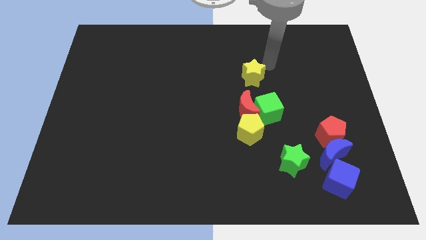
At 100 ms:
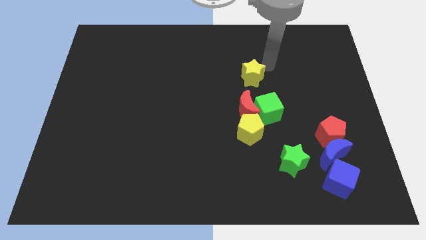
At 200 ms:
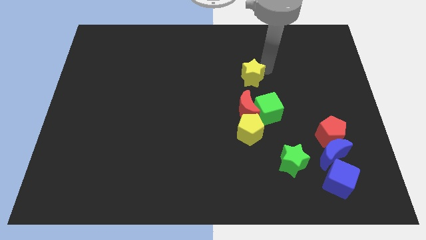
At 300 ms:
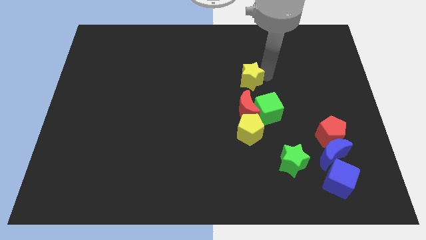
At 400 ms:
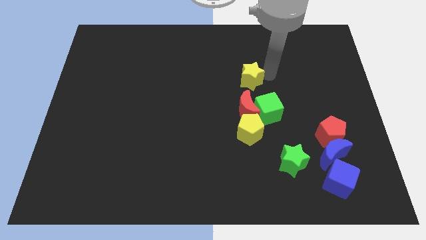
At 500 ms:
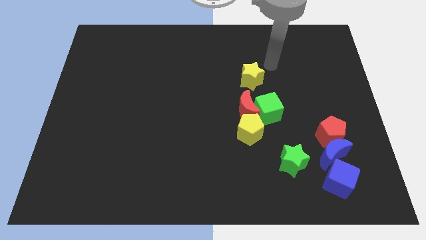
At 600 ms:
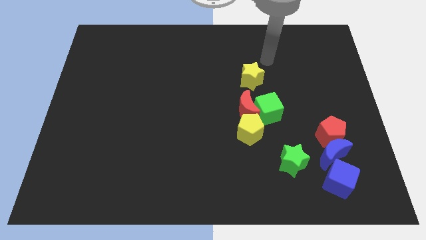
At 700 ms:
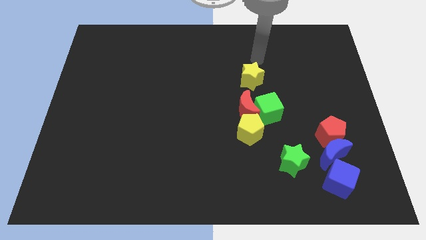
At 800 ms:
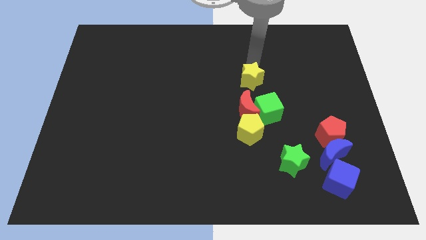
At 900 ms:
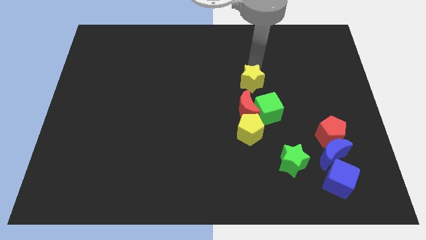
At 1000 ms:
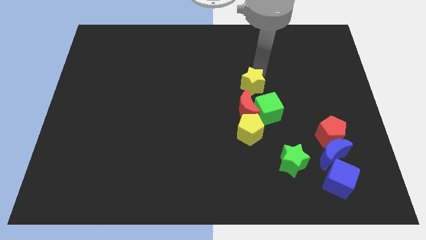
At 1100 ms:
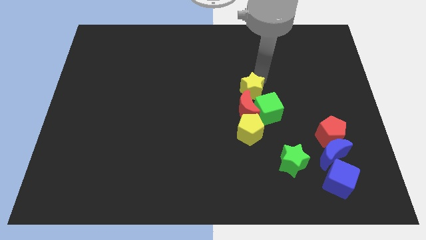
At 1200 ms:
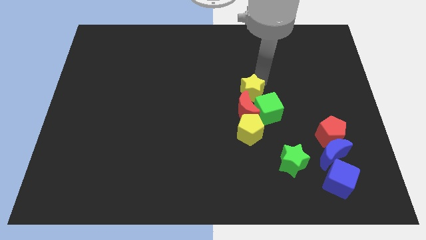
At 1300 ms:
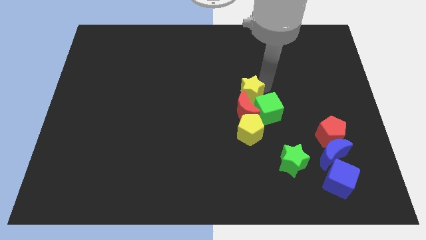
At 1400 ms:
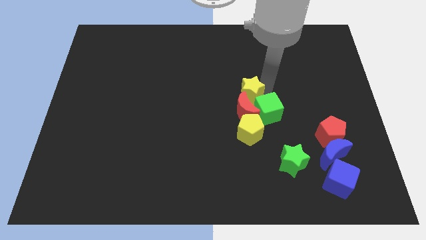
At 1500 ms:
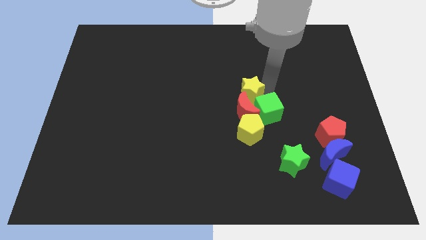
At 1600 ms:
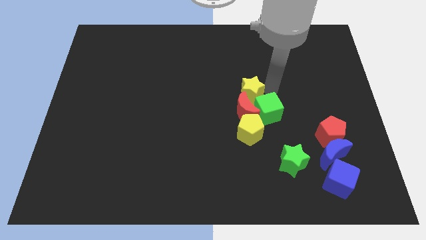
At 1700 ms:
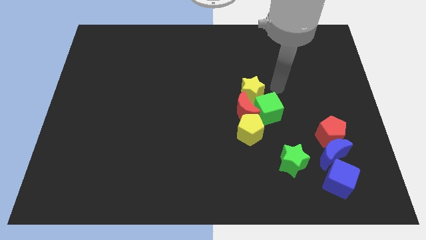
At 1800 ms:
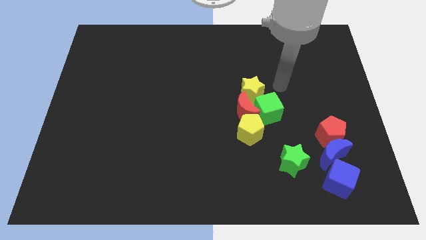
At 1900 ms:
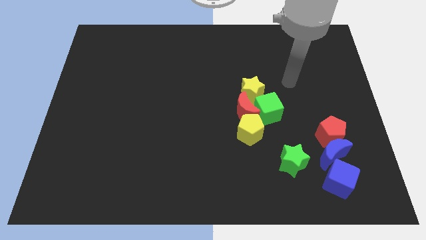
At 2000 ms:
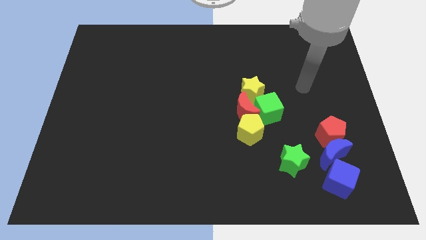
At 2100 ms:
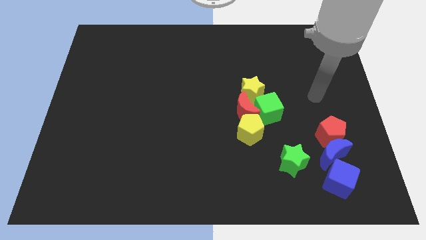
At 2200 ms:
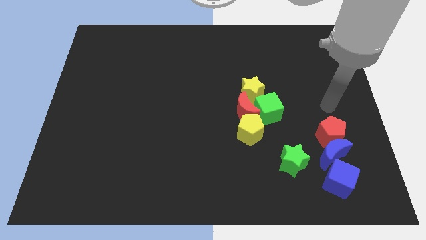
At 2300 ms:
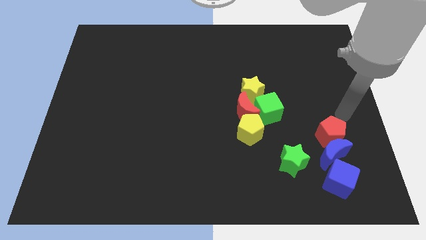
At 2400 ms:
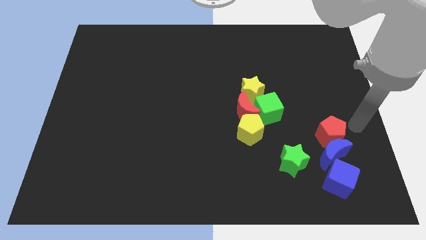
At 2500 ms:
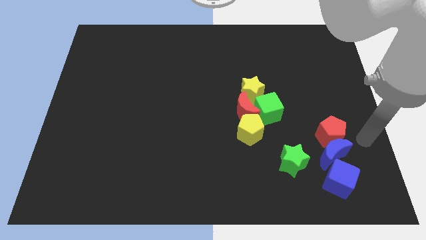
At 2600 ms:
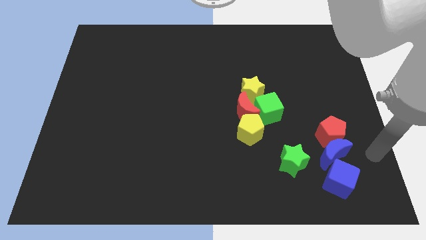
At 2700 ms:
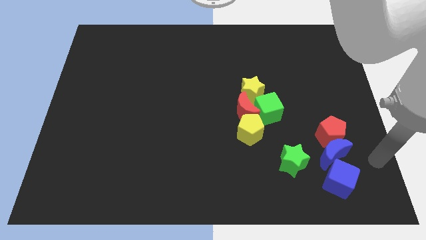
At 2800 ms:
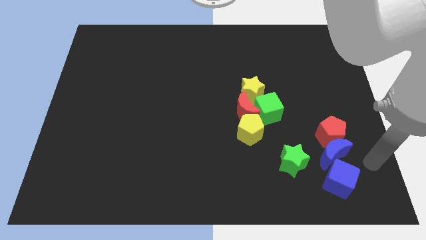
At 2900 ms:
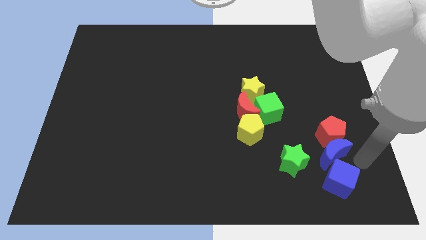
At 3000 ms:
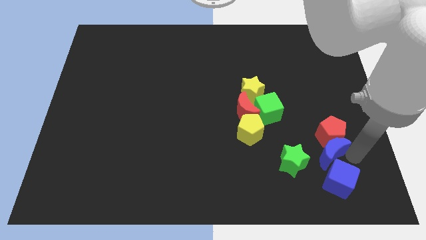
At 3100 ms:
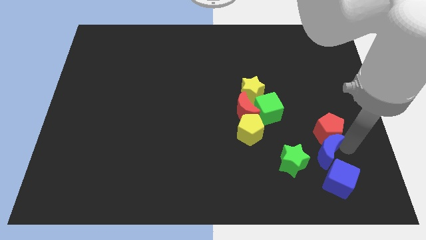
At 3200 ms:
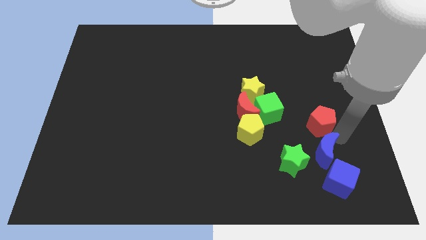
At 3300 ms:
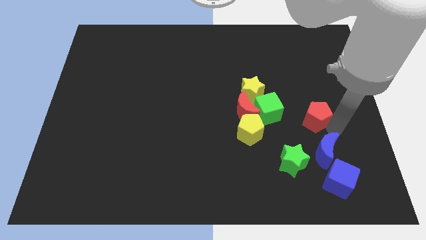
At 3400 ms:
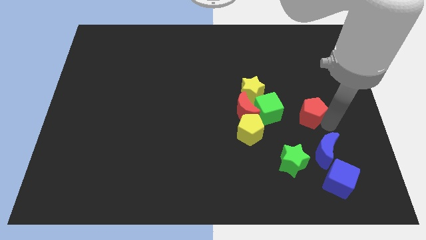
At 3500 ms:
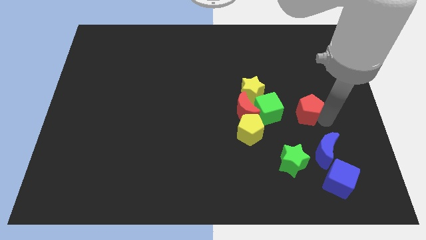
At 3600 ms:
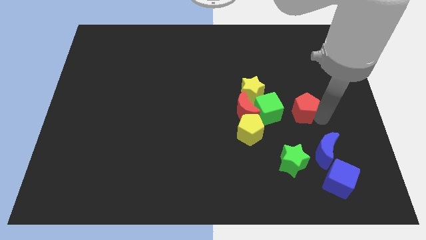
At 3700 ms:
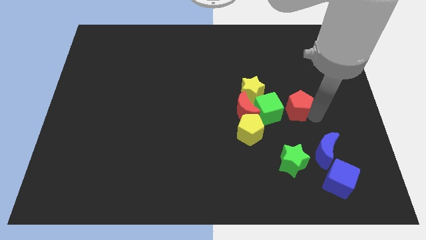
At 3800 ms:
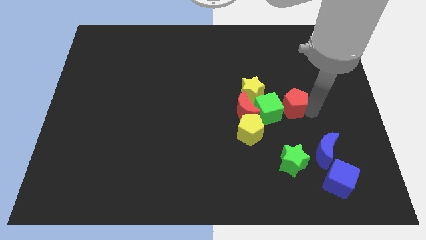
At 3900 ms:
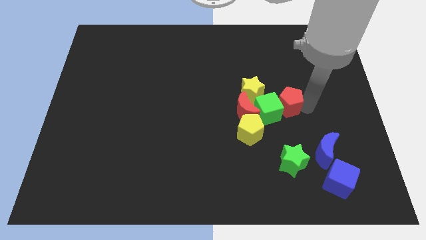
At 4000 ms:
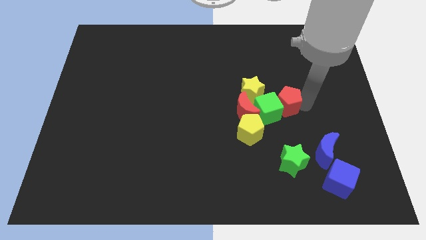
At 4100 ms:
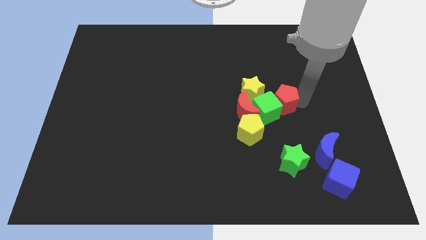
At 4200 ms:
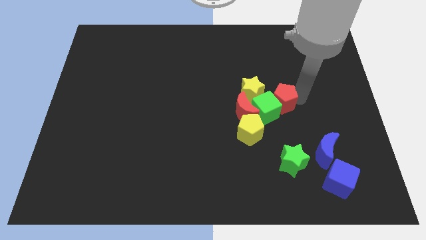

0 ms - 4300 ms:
place the yellow star above the green cube

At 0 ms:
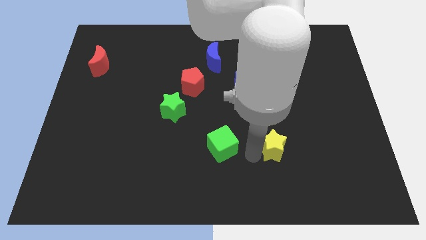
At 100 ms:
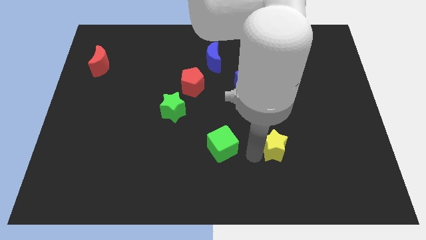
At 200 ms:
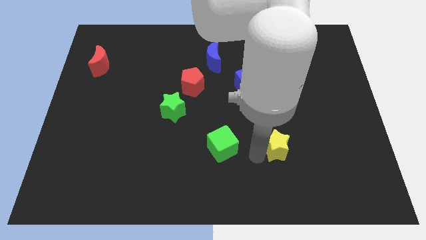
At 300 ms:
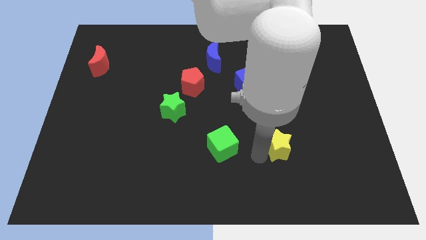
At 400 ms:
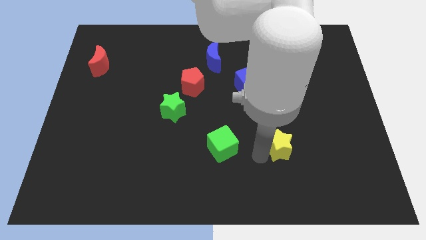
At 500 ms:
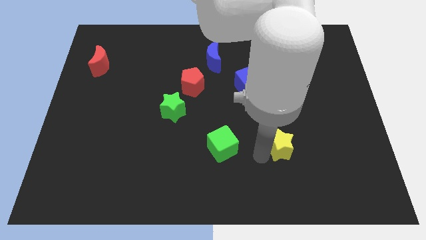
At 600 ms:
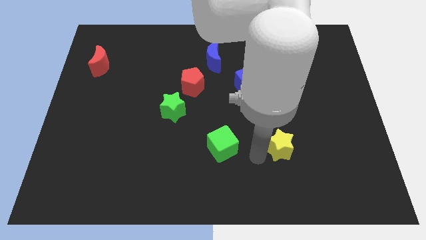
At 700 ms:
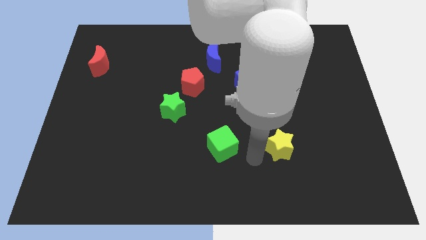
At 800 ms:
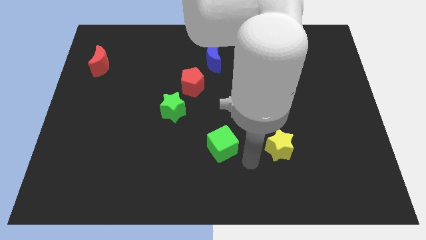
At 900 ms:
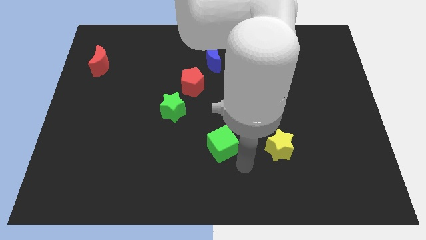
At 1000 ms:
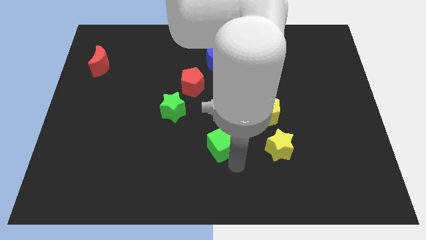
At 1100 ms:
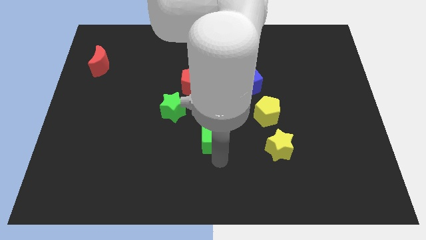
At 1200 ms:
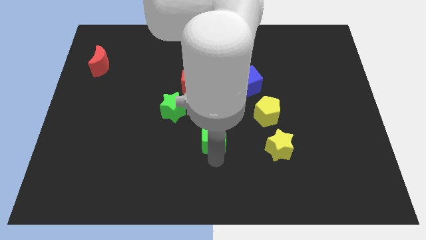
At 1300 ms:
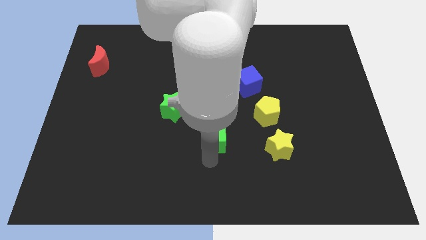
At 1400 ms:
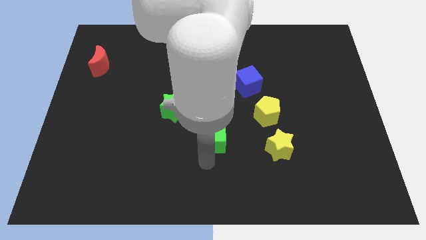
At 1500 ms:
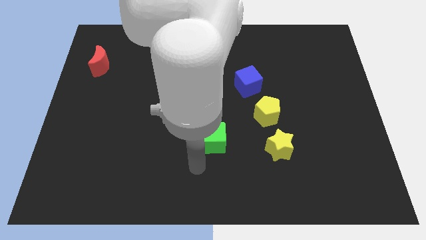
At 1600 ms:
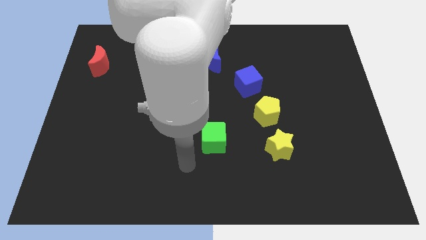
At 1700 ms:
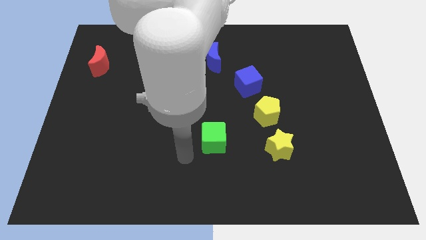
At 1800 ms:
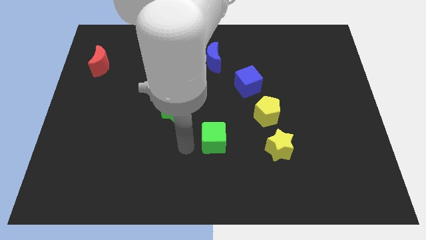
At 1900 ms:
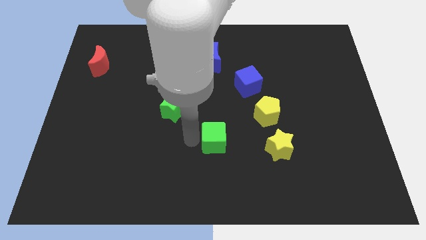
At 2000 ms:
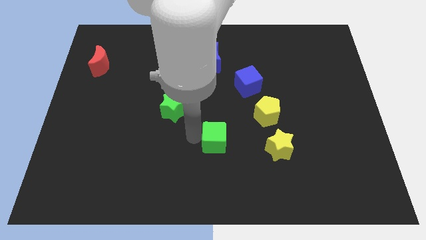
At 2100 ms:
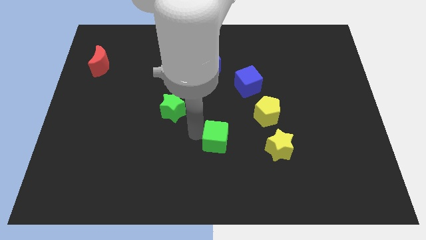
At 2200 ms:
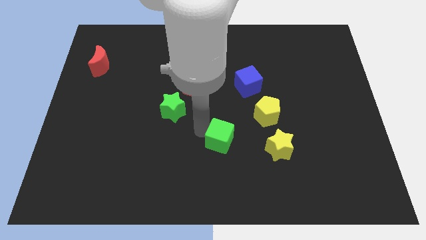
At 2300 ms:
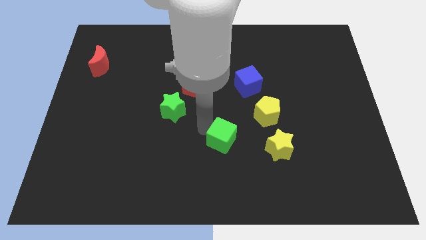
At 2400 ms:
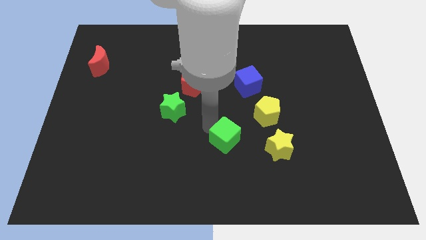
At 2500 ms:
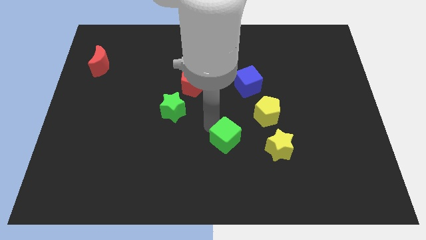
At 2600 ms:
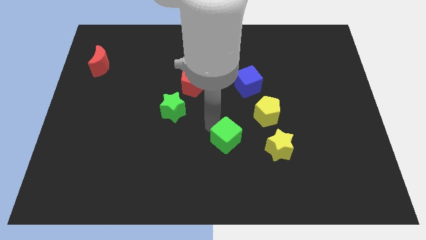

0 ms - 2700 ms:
move your arm away from the yellow star

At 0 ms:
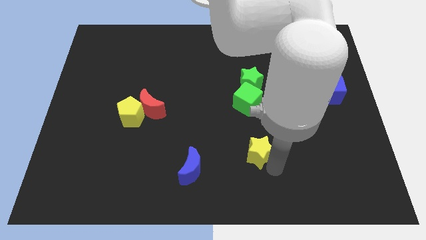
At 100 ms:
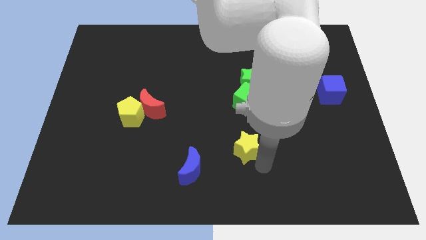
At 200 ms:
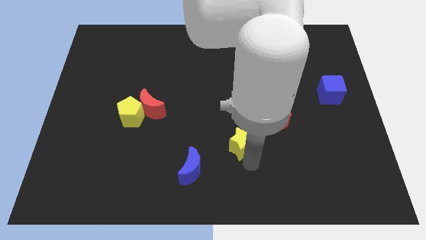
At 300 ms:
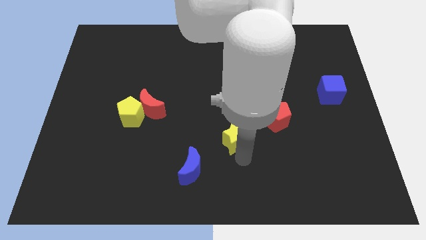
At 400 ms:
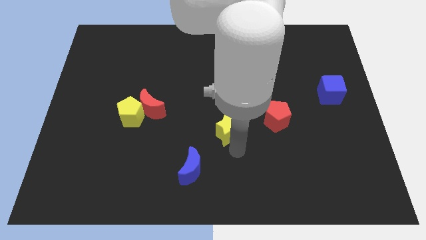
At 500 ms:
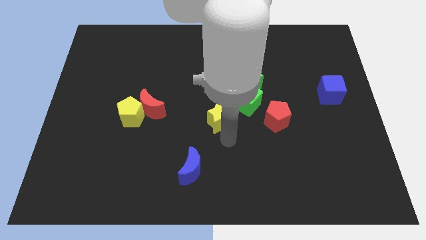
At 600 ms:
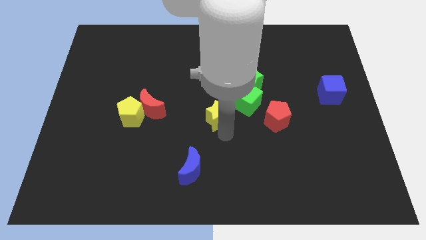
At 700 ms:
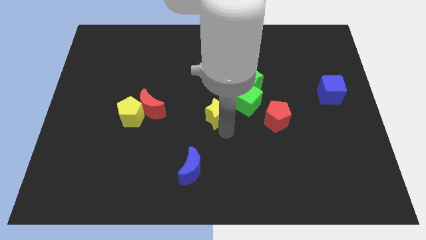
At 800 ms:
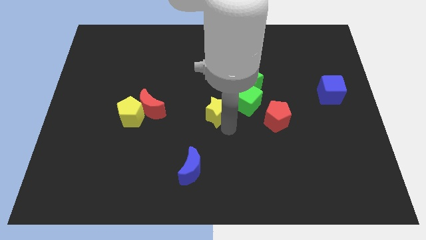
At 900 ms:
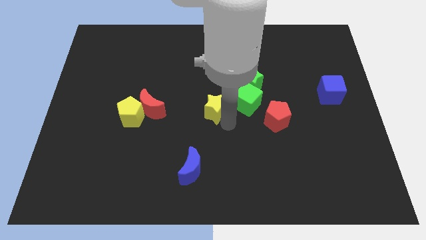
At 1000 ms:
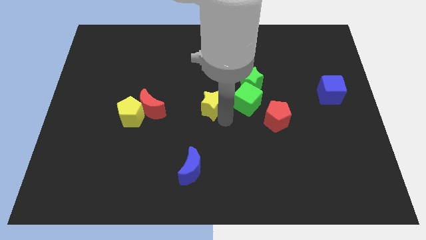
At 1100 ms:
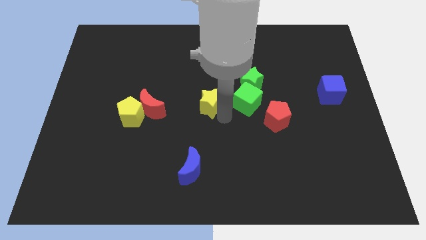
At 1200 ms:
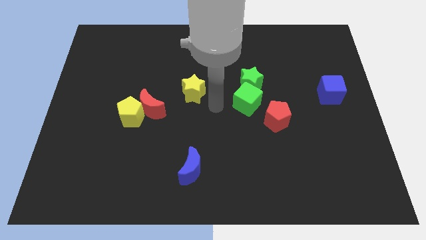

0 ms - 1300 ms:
place the yellow star to the left side of the green cube

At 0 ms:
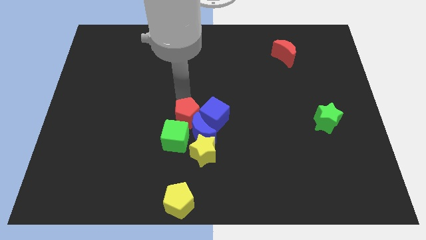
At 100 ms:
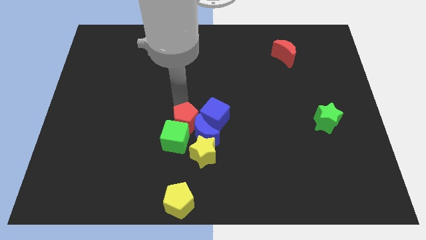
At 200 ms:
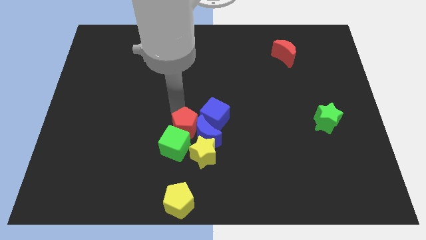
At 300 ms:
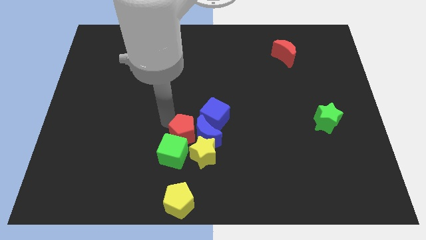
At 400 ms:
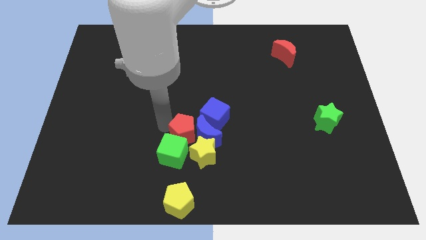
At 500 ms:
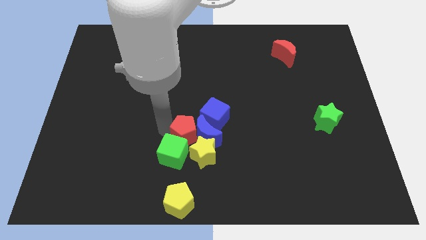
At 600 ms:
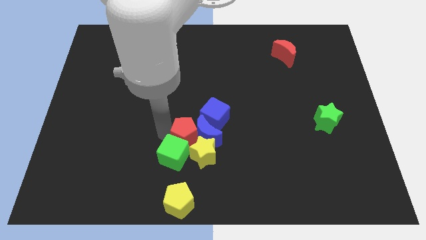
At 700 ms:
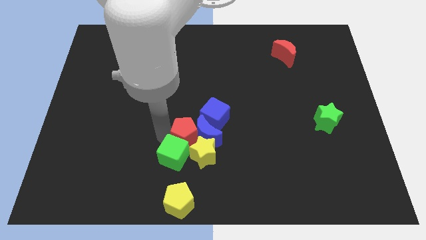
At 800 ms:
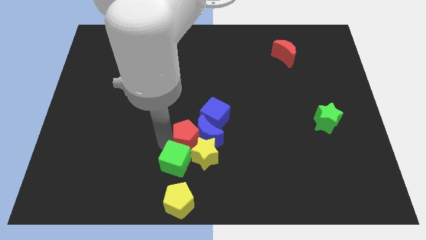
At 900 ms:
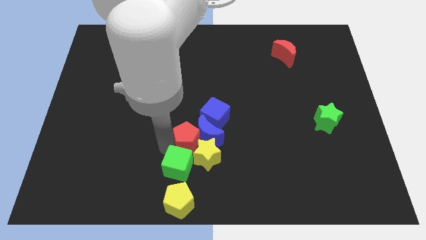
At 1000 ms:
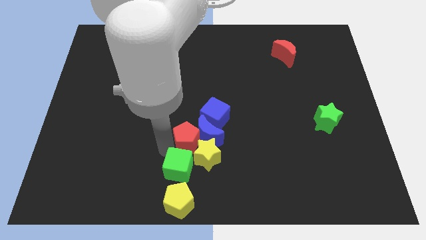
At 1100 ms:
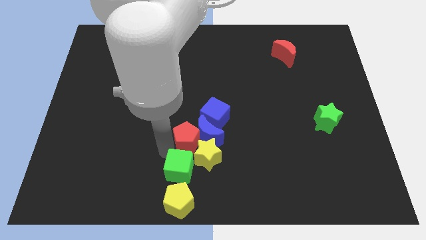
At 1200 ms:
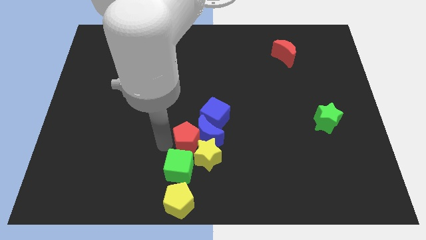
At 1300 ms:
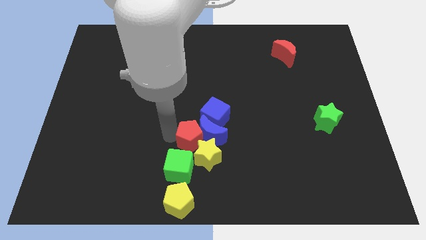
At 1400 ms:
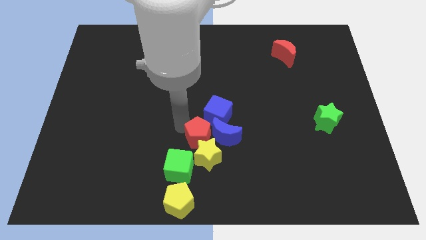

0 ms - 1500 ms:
push a group of blocks downward
